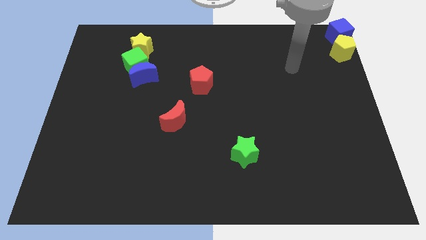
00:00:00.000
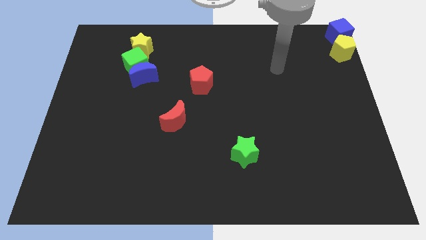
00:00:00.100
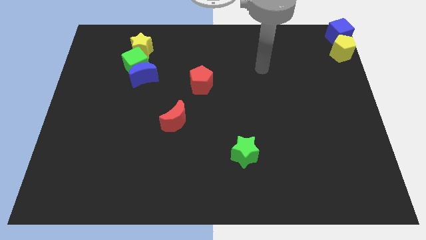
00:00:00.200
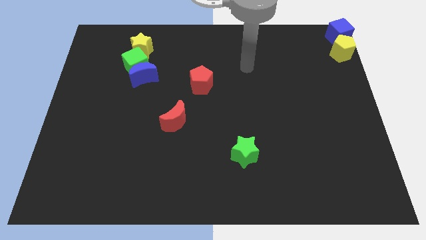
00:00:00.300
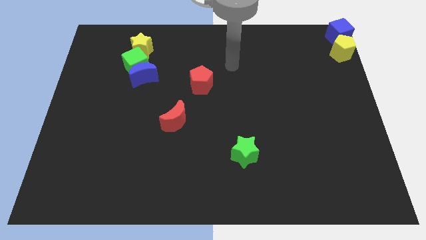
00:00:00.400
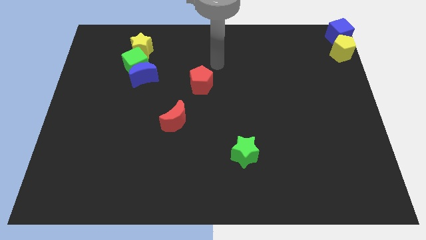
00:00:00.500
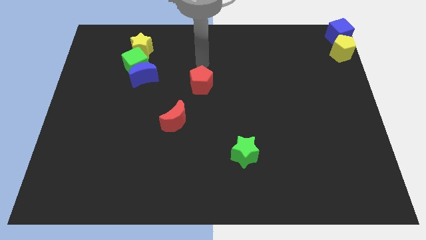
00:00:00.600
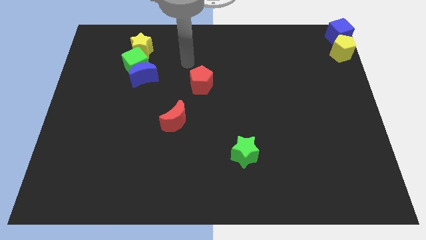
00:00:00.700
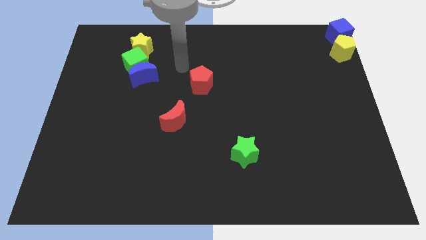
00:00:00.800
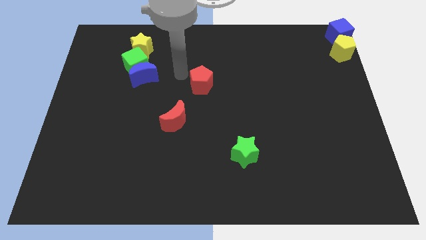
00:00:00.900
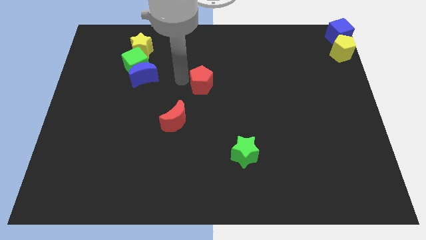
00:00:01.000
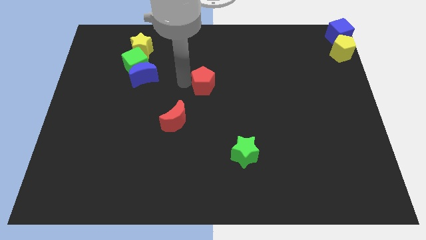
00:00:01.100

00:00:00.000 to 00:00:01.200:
put your hand to the left of the red pentagon

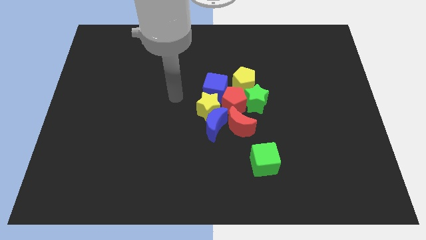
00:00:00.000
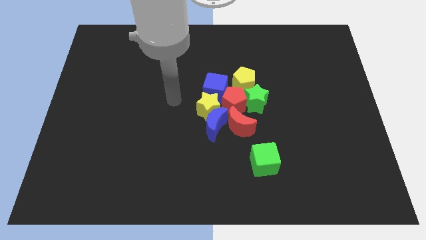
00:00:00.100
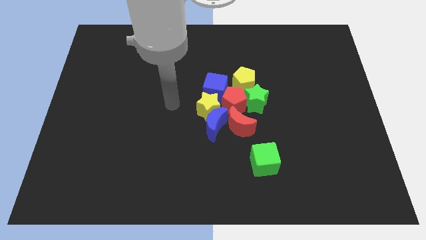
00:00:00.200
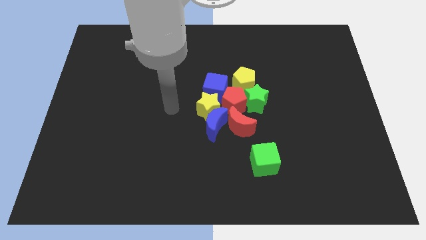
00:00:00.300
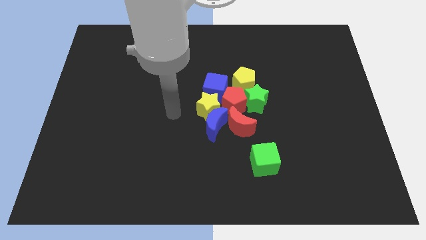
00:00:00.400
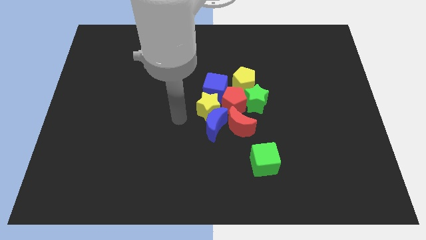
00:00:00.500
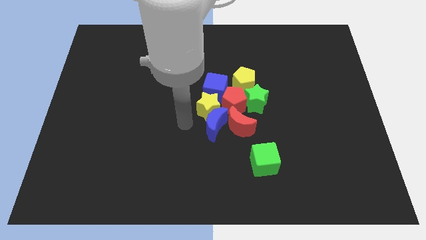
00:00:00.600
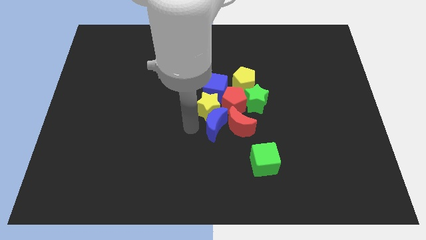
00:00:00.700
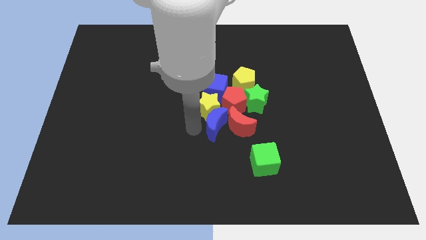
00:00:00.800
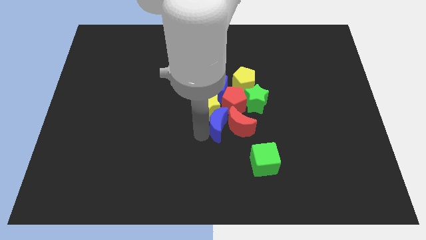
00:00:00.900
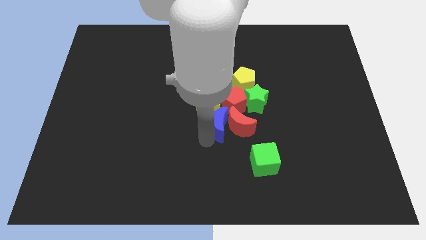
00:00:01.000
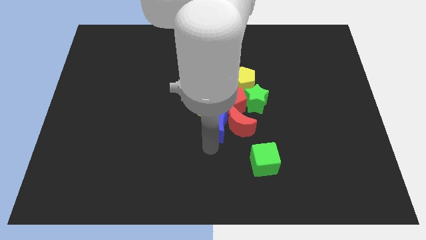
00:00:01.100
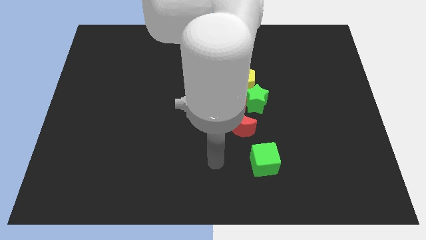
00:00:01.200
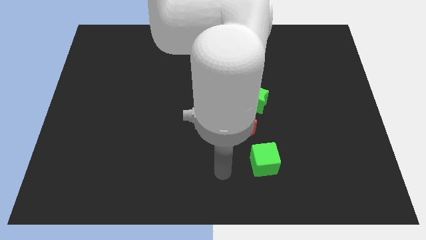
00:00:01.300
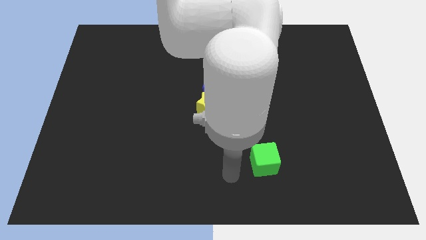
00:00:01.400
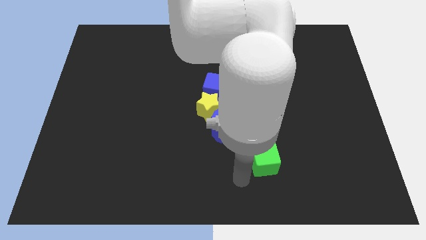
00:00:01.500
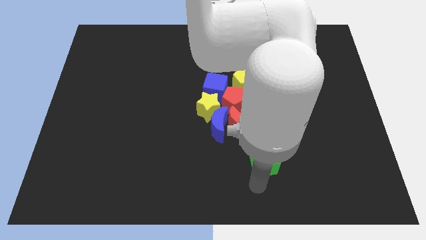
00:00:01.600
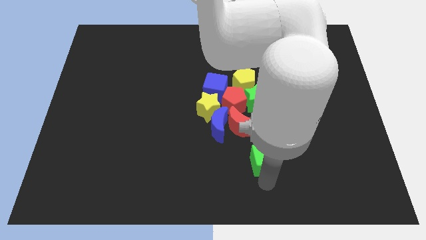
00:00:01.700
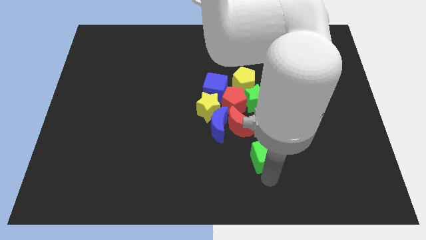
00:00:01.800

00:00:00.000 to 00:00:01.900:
move the arm close to the green cube

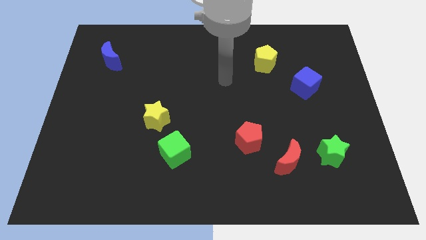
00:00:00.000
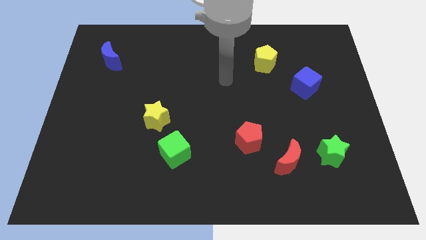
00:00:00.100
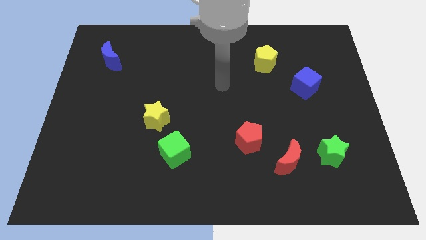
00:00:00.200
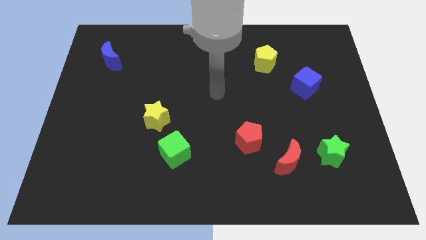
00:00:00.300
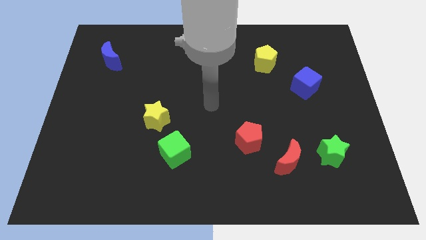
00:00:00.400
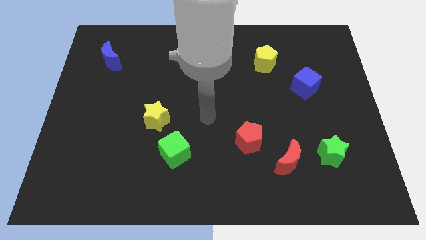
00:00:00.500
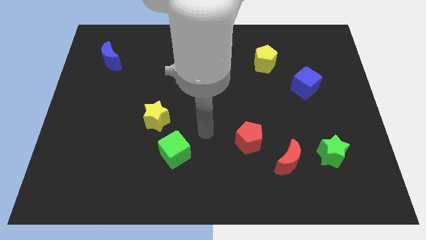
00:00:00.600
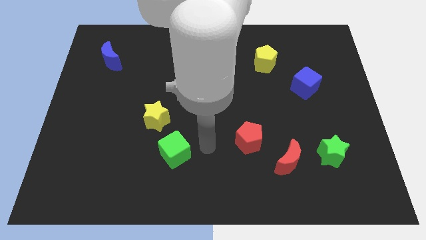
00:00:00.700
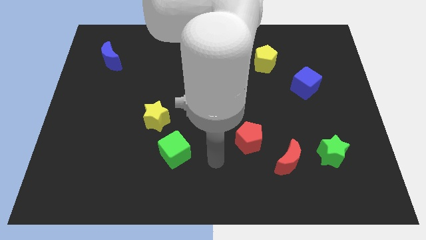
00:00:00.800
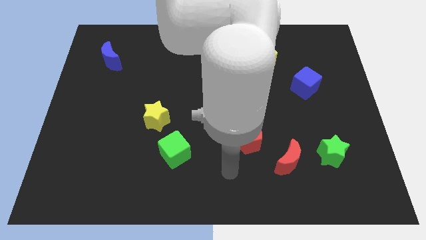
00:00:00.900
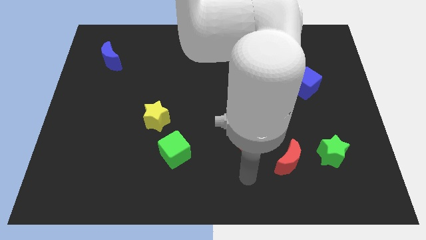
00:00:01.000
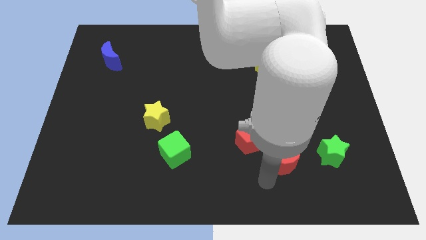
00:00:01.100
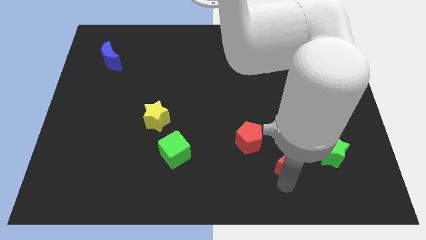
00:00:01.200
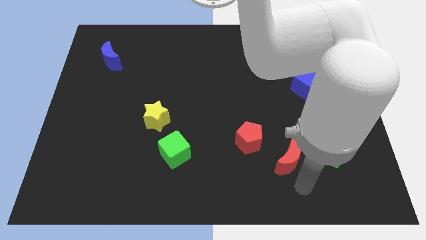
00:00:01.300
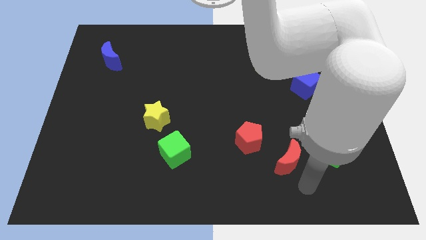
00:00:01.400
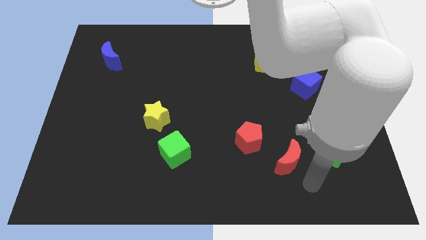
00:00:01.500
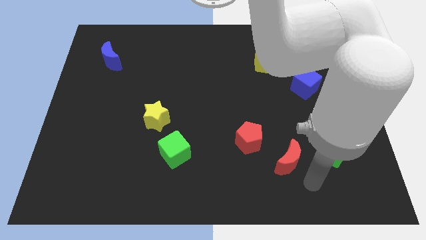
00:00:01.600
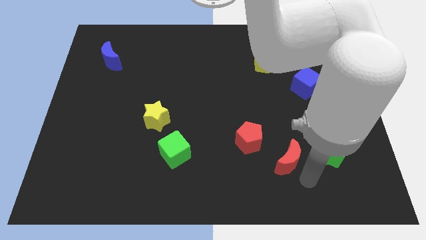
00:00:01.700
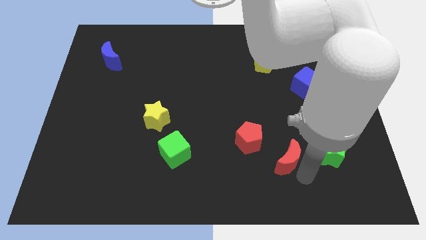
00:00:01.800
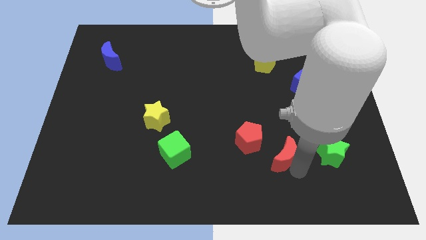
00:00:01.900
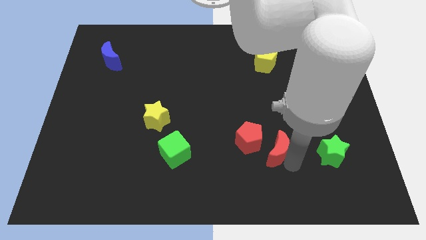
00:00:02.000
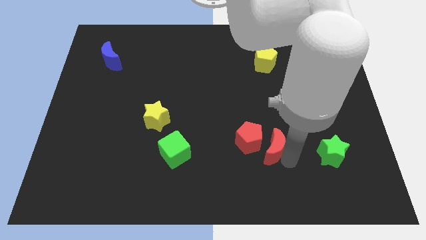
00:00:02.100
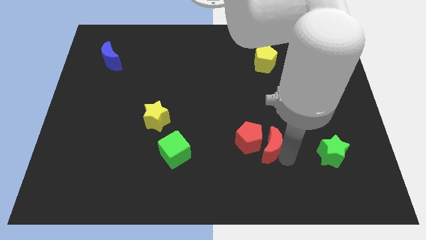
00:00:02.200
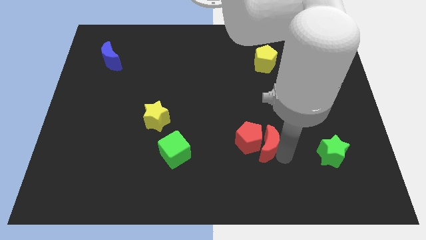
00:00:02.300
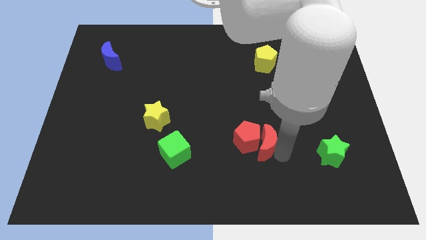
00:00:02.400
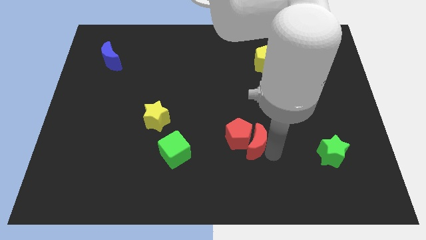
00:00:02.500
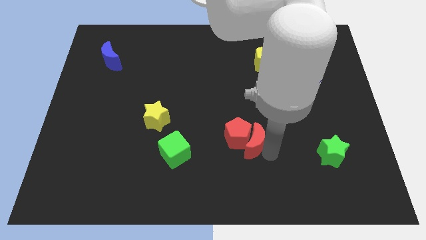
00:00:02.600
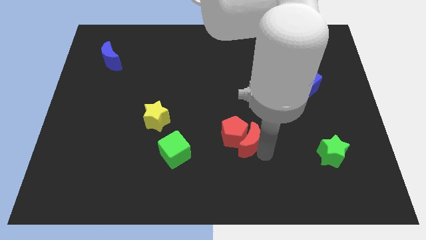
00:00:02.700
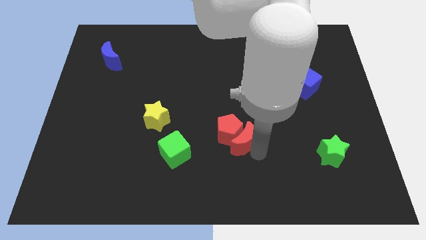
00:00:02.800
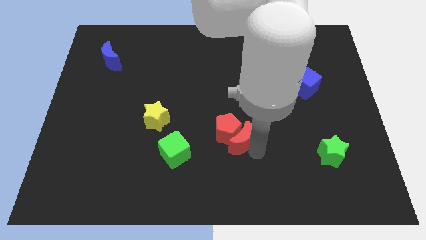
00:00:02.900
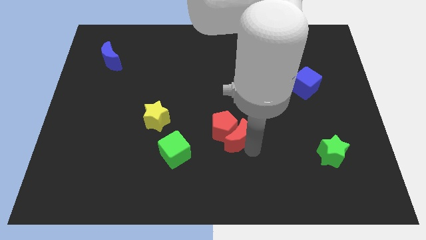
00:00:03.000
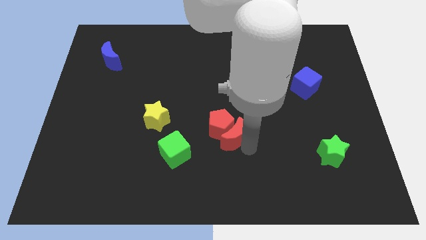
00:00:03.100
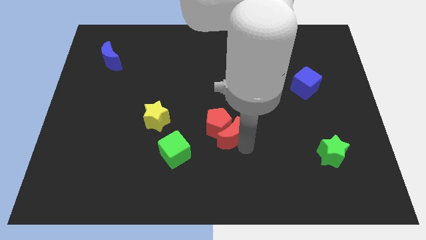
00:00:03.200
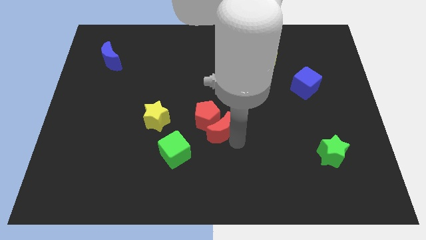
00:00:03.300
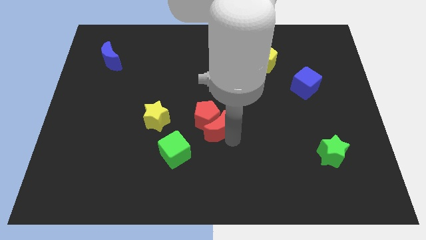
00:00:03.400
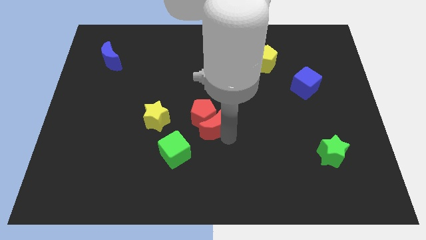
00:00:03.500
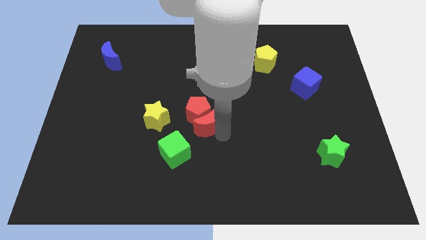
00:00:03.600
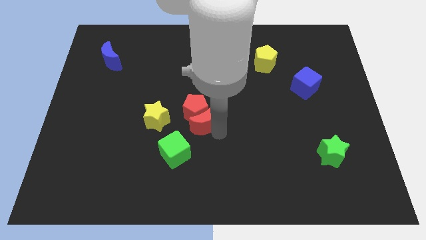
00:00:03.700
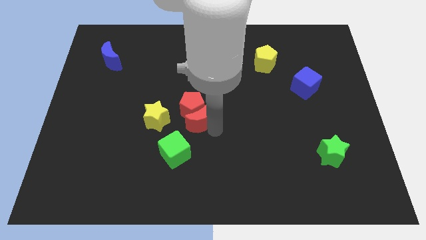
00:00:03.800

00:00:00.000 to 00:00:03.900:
push the red crescent into the red pentagon

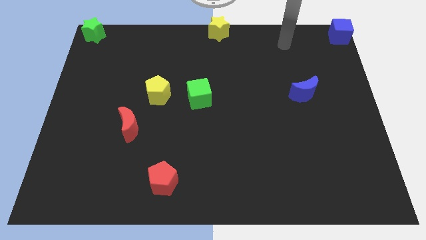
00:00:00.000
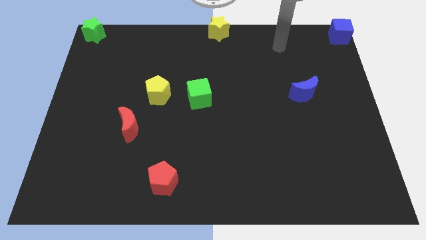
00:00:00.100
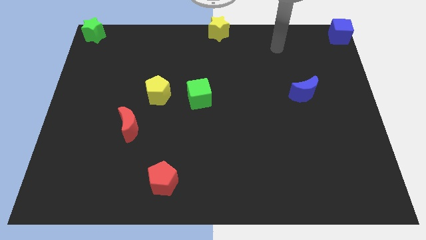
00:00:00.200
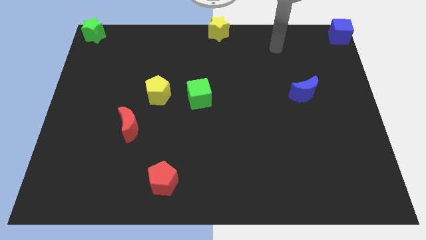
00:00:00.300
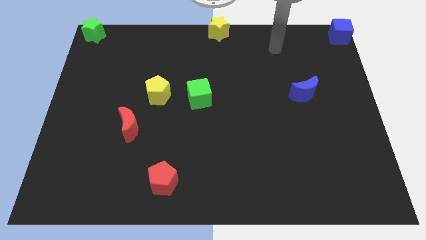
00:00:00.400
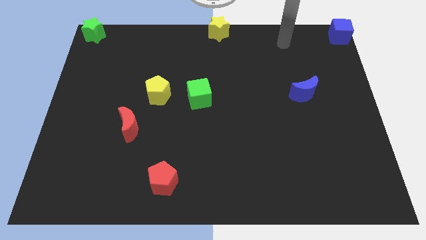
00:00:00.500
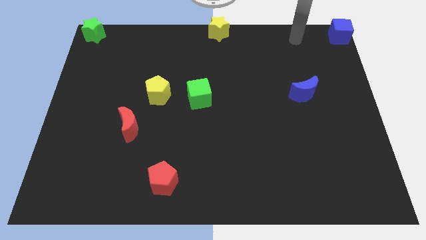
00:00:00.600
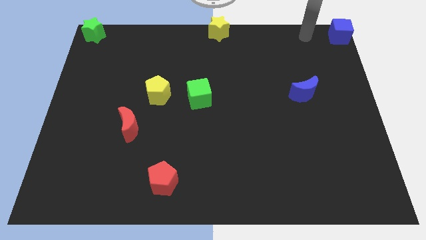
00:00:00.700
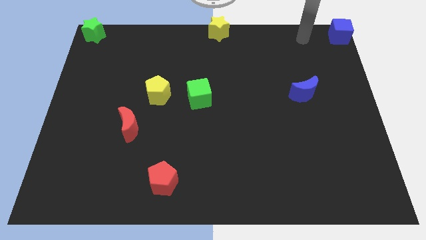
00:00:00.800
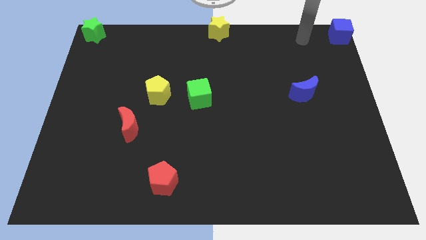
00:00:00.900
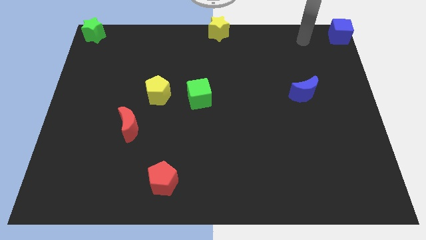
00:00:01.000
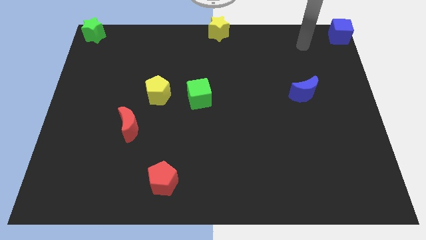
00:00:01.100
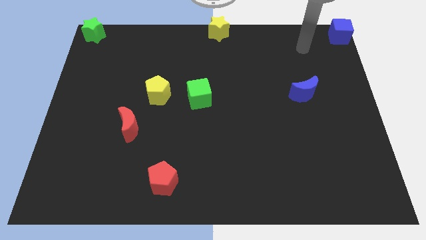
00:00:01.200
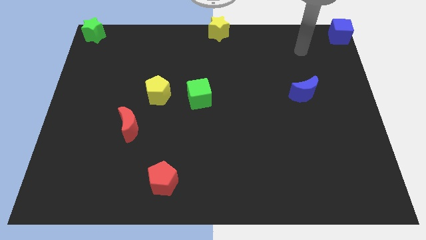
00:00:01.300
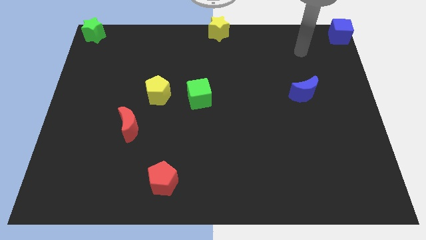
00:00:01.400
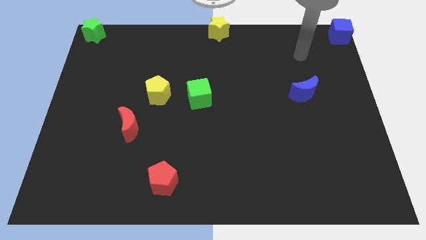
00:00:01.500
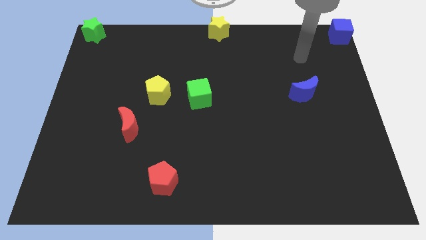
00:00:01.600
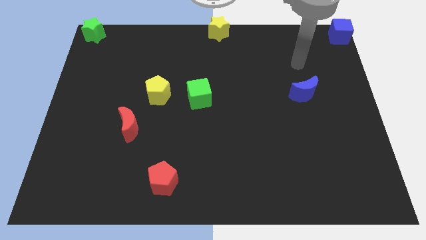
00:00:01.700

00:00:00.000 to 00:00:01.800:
point the arm above the blue crescent

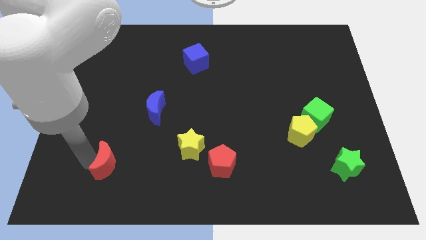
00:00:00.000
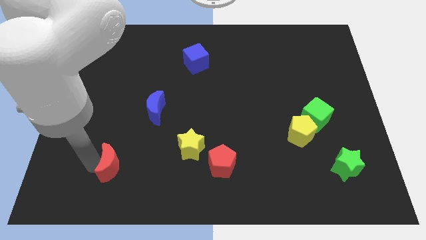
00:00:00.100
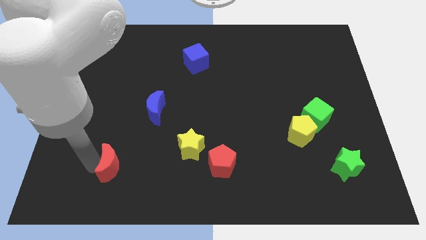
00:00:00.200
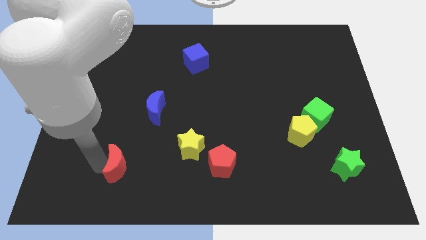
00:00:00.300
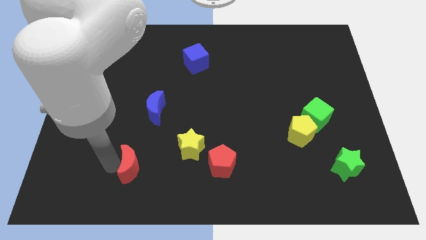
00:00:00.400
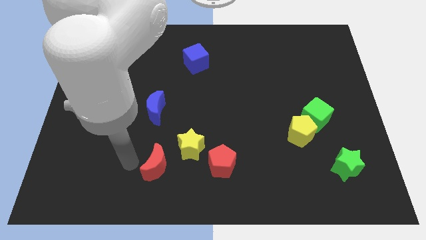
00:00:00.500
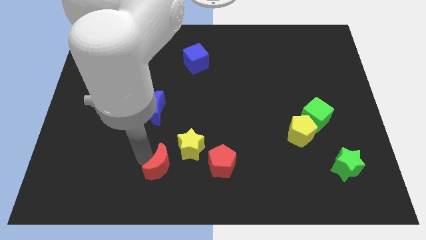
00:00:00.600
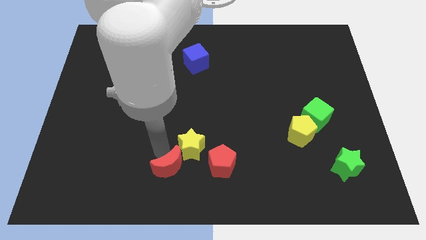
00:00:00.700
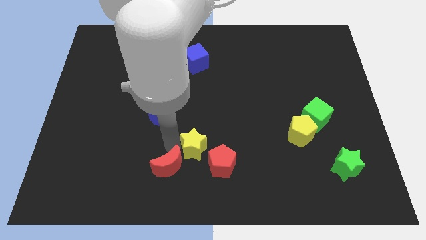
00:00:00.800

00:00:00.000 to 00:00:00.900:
place the red moon diagonal to the yellow star
